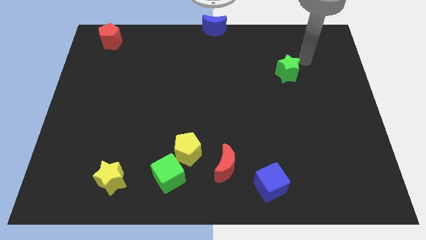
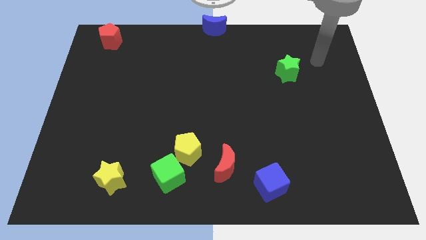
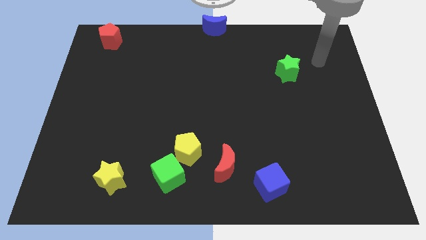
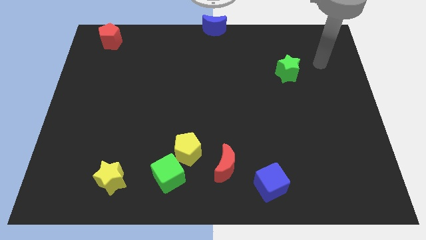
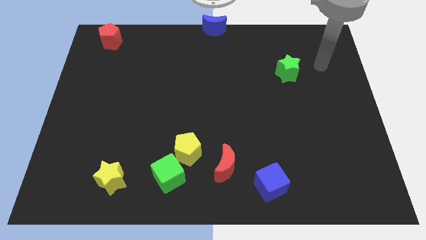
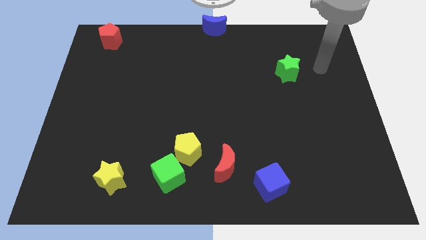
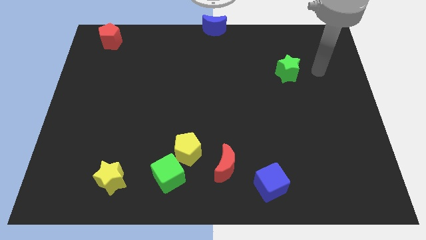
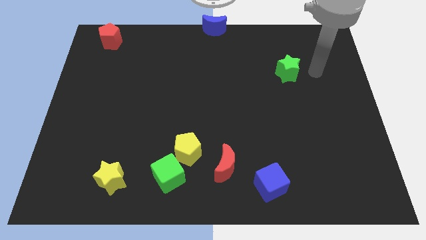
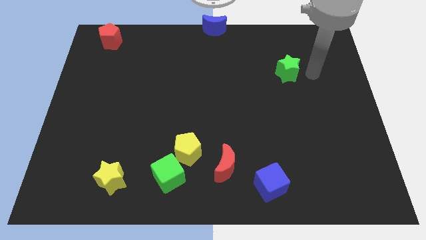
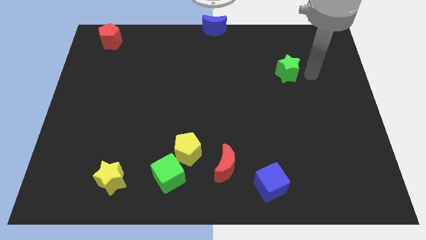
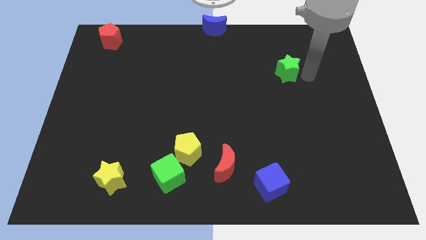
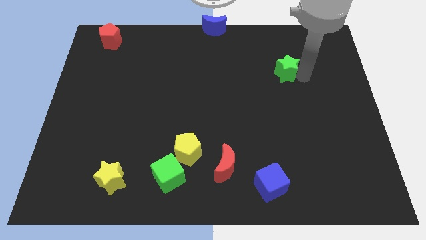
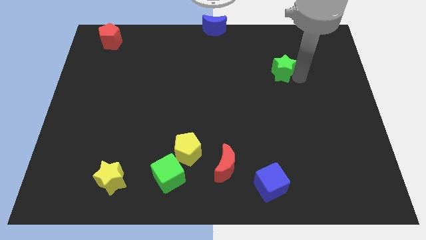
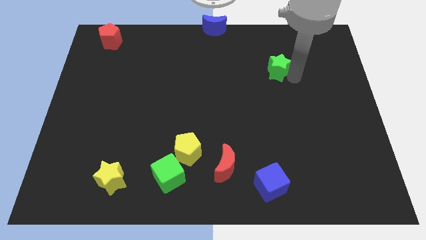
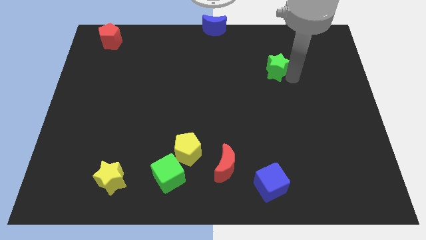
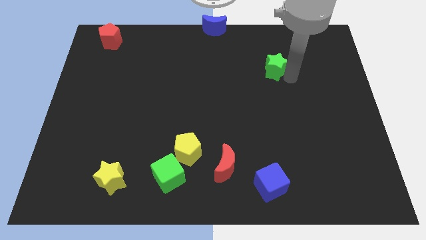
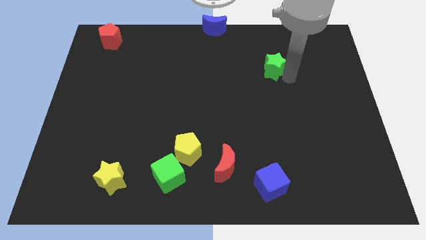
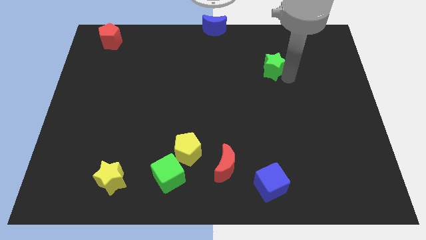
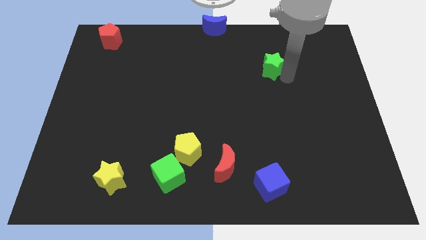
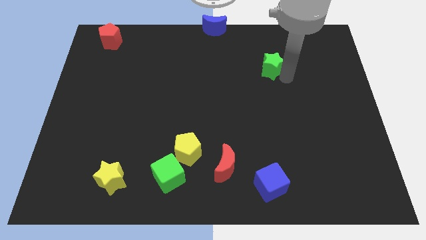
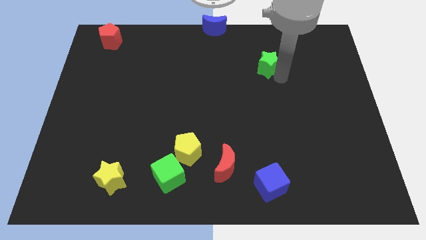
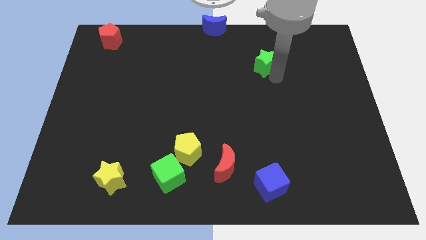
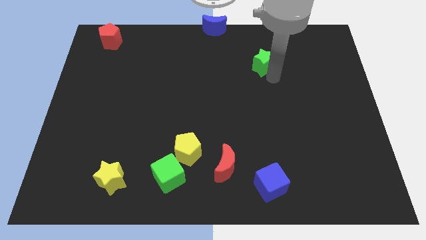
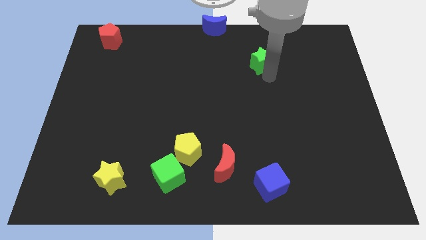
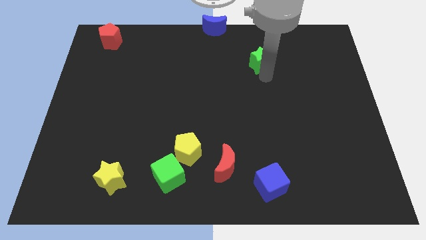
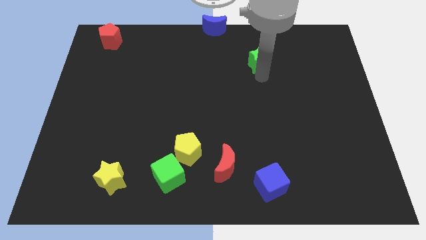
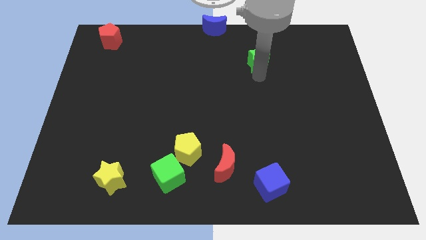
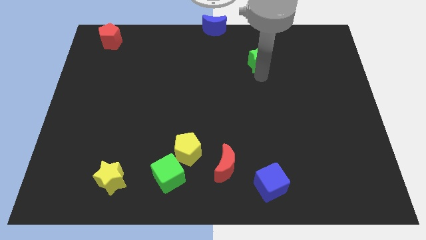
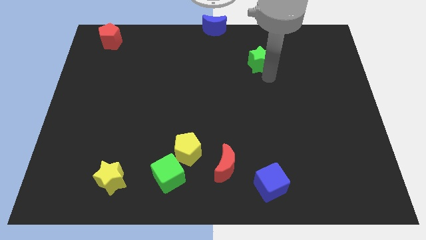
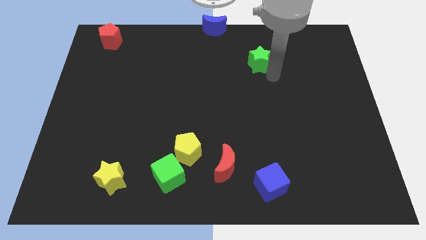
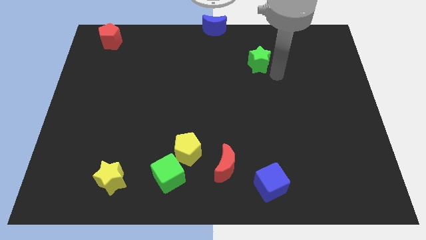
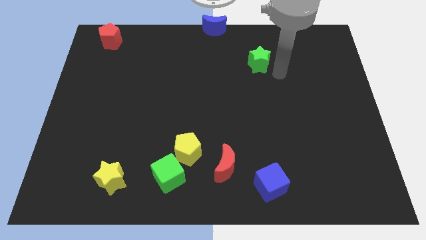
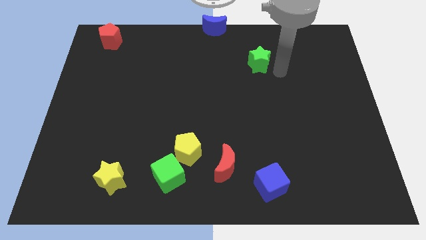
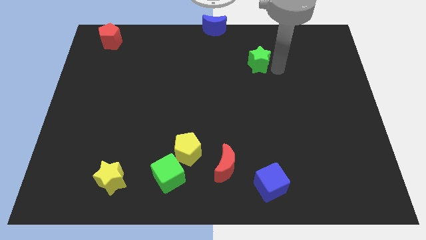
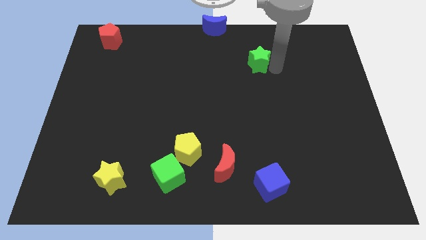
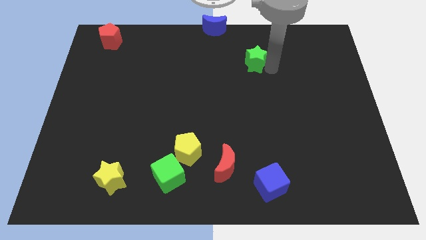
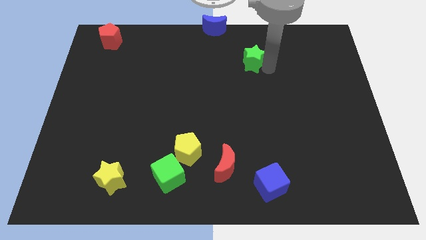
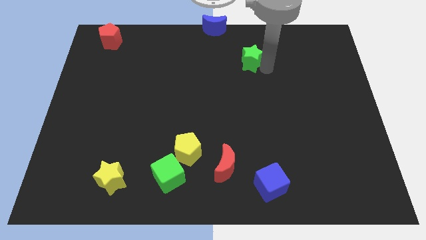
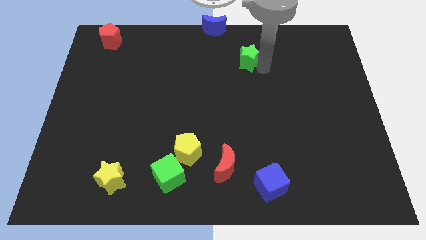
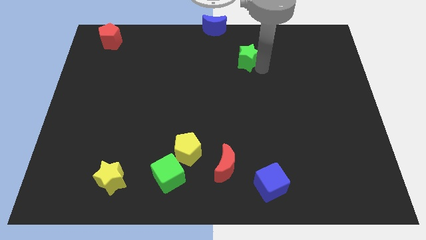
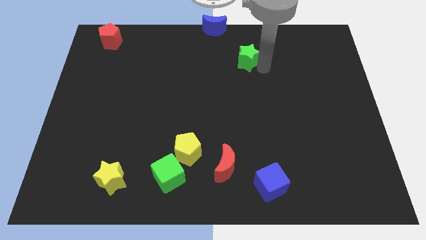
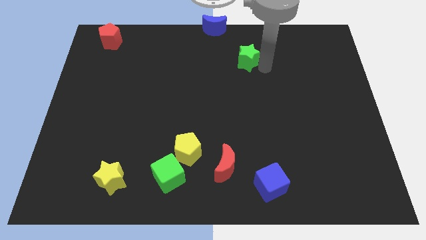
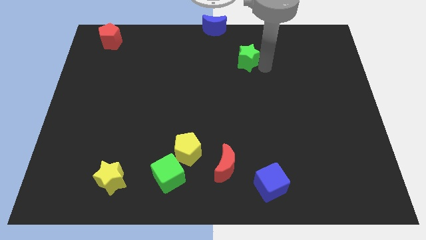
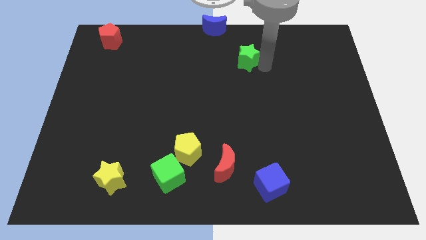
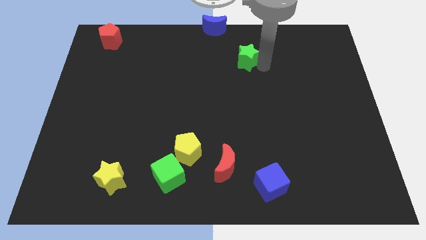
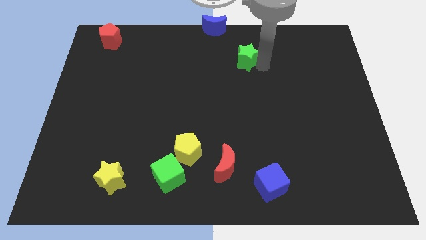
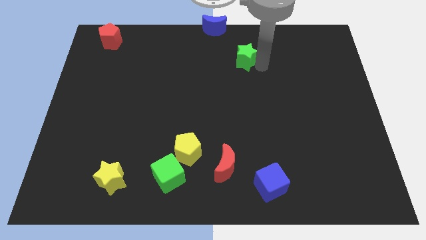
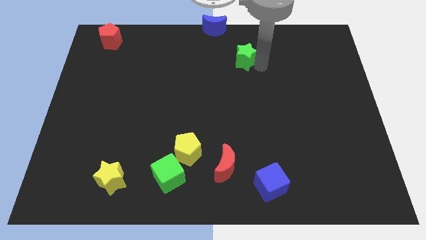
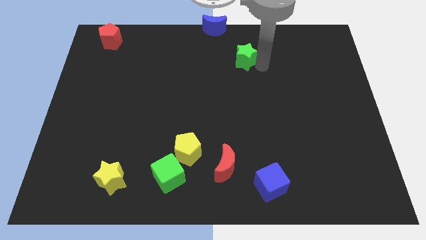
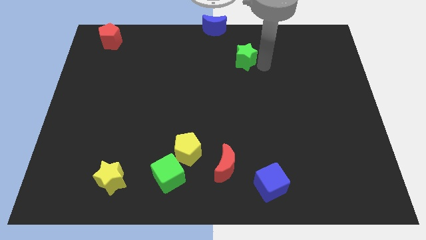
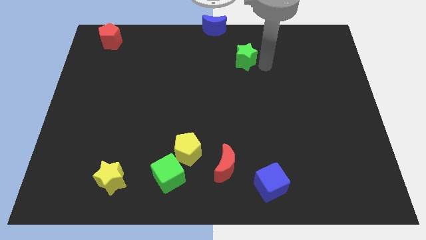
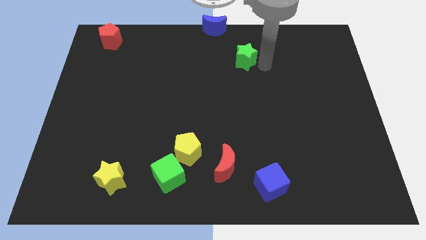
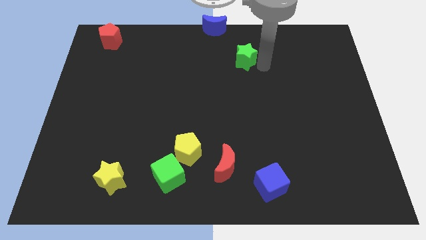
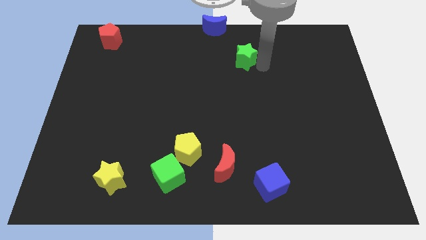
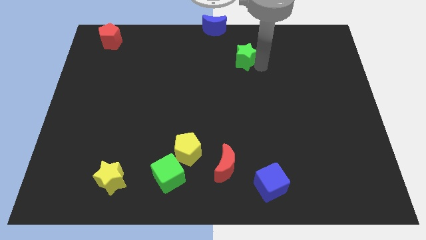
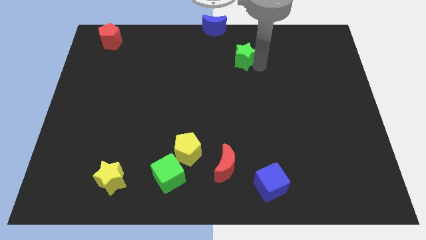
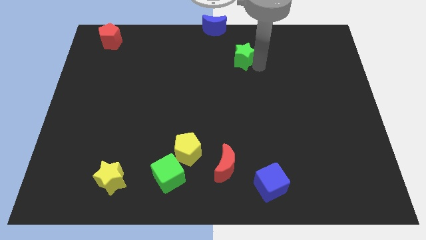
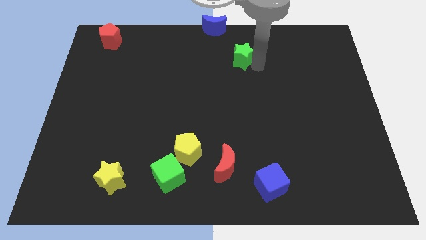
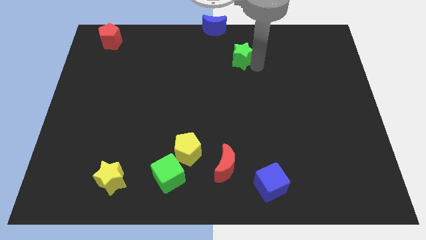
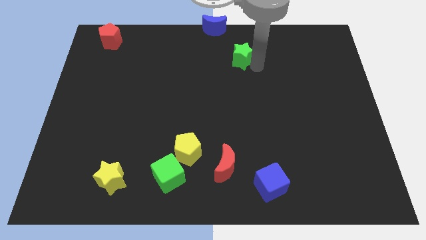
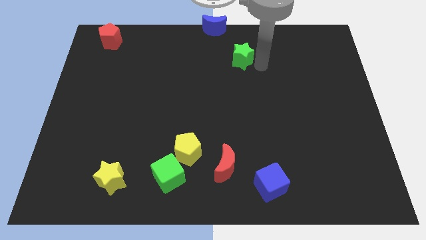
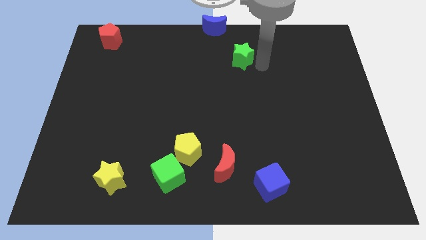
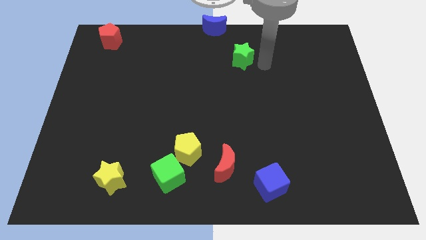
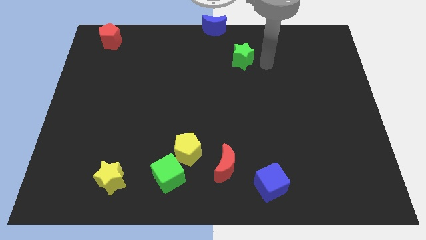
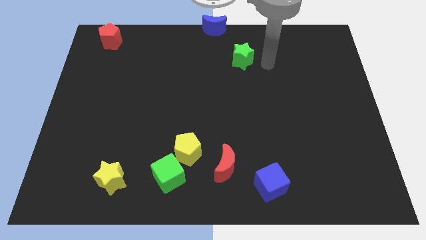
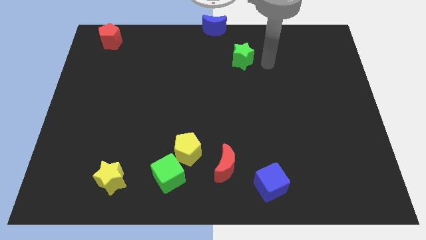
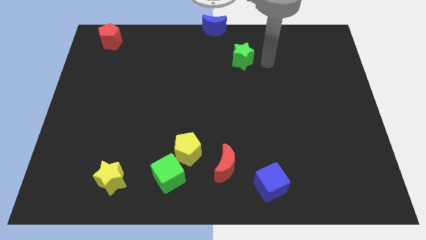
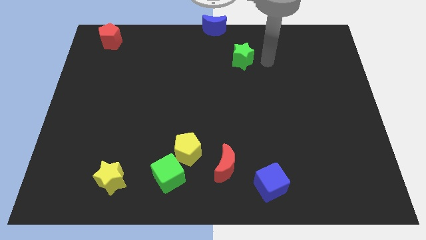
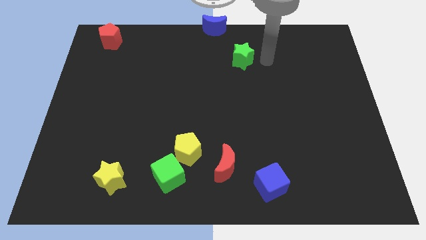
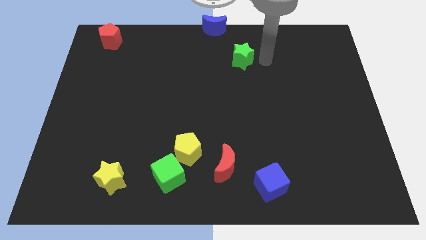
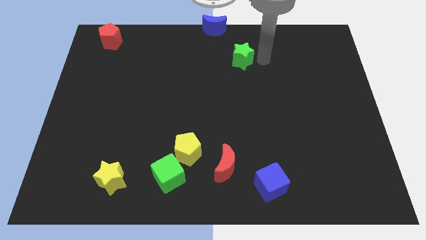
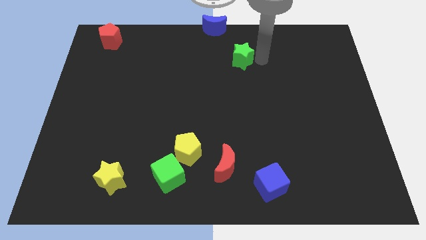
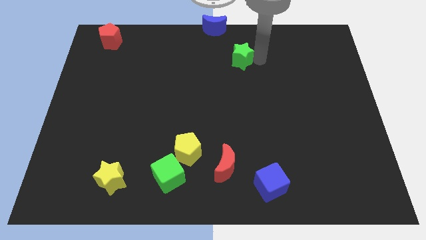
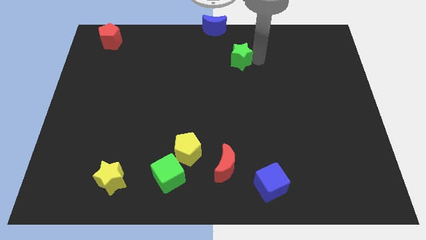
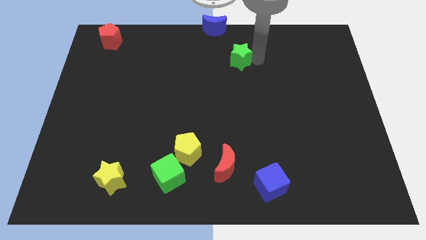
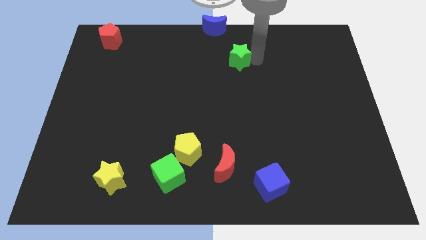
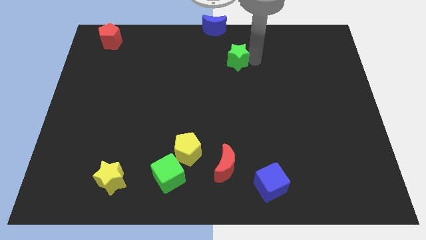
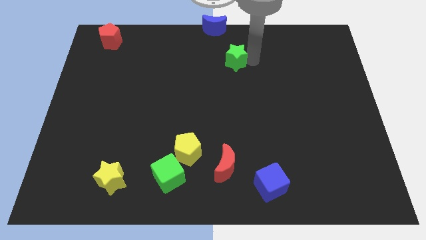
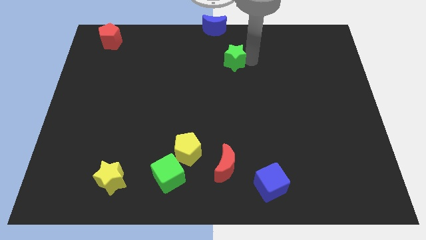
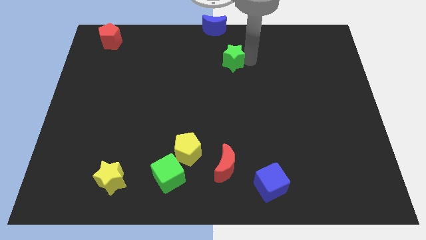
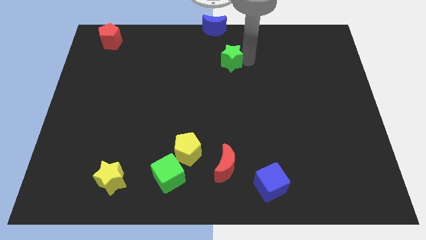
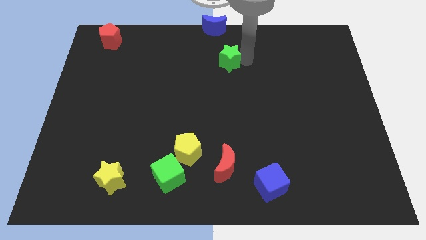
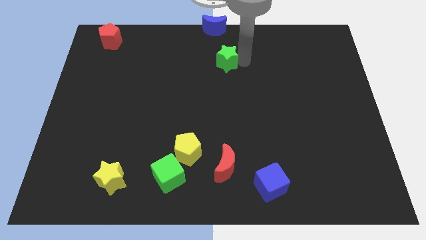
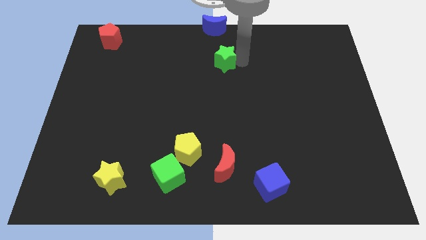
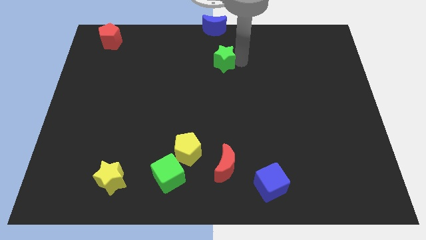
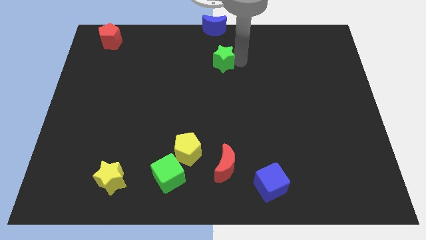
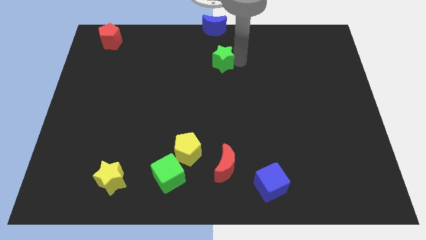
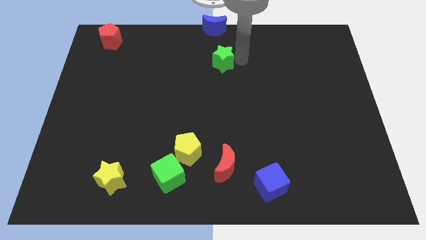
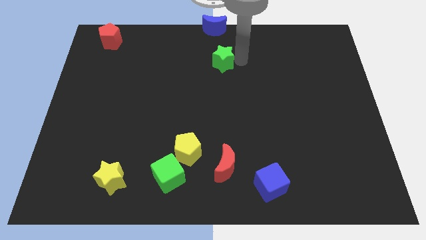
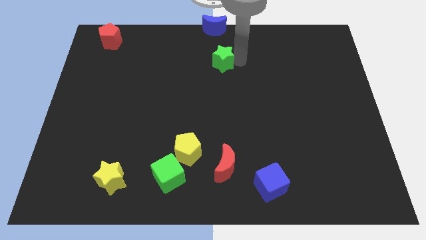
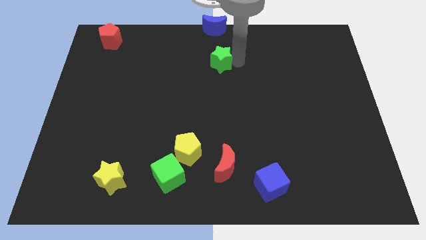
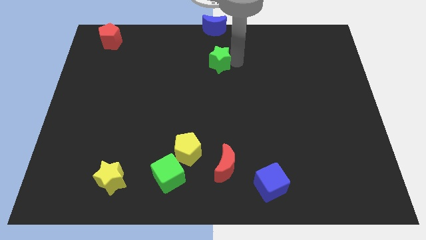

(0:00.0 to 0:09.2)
place the green star below the blue moon
